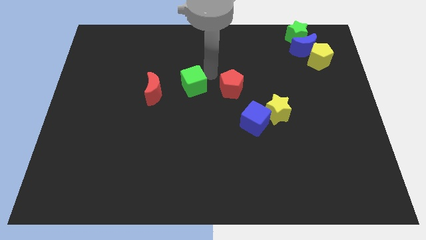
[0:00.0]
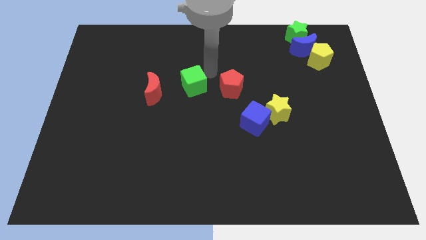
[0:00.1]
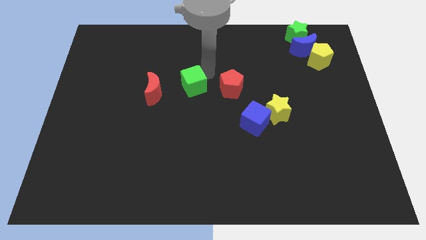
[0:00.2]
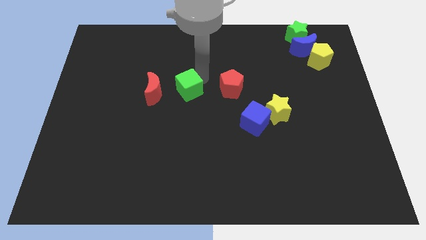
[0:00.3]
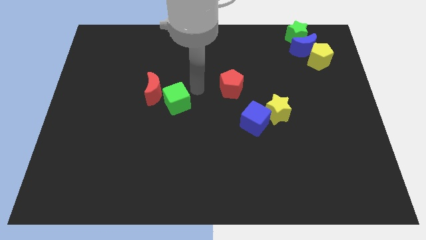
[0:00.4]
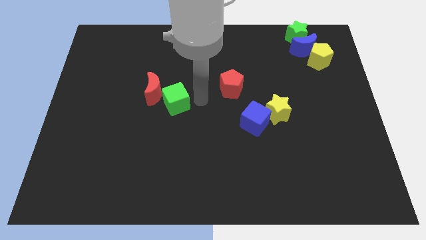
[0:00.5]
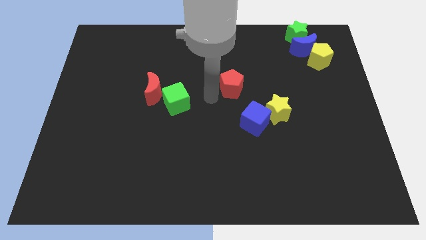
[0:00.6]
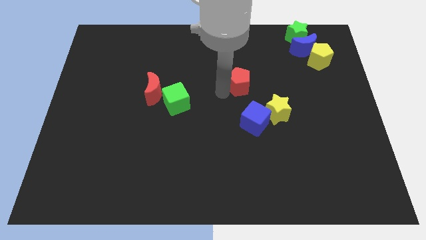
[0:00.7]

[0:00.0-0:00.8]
push the green cube to the bottom right to the red crescent

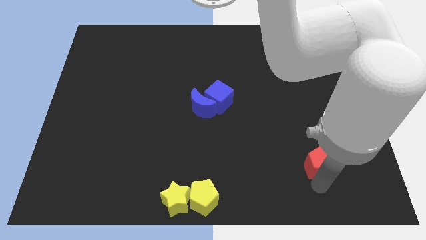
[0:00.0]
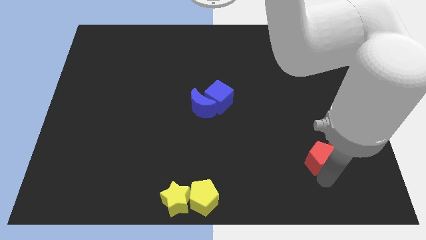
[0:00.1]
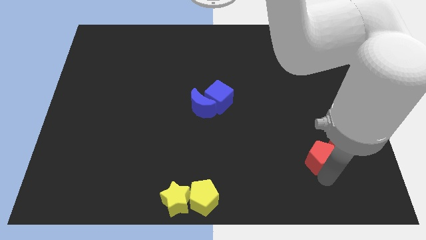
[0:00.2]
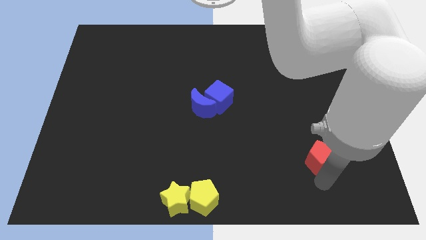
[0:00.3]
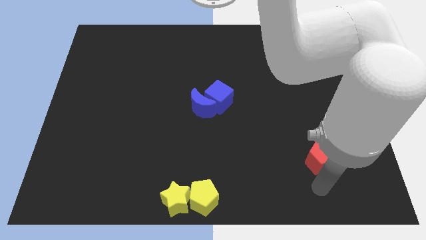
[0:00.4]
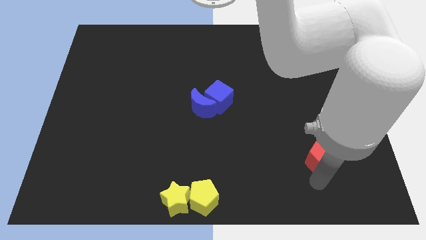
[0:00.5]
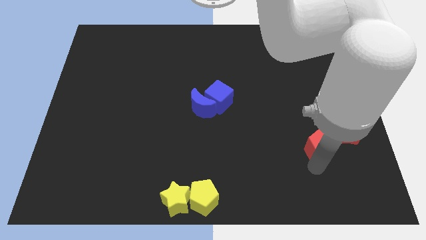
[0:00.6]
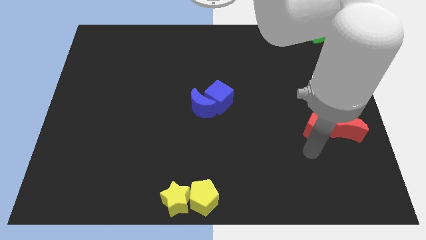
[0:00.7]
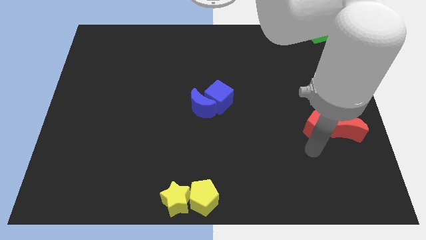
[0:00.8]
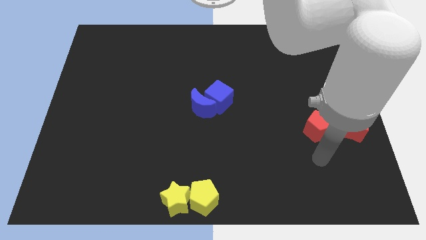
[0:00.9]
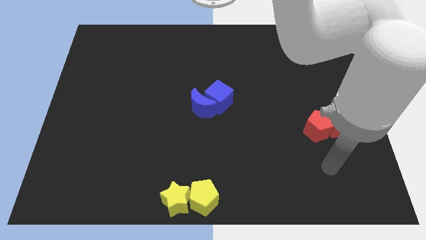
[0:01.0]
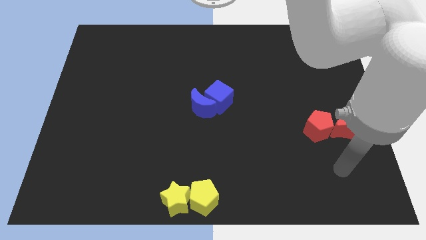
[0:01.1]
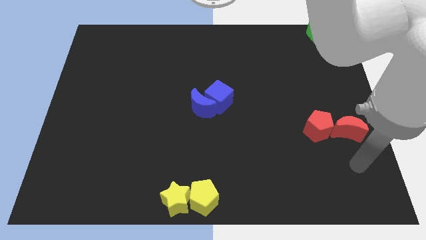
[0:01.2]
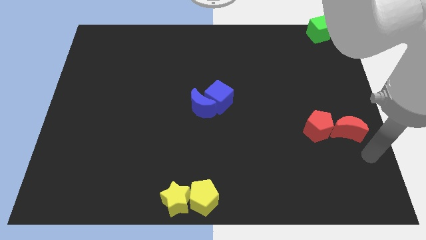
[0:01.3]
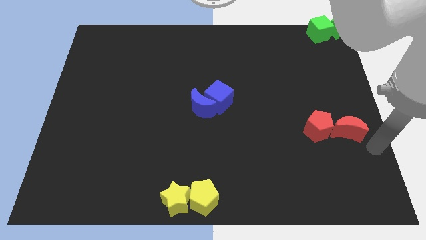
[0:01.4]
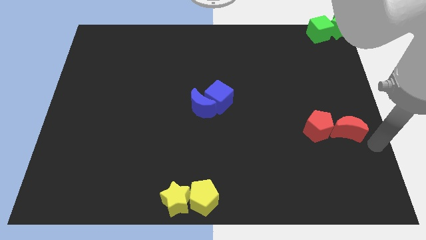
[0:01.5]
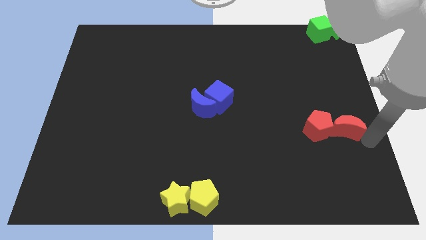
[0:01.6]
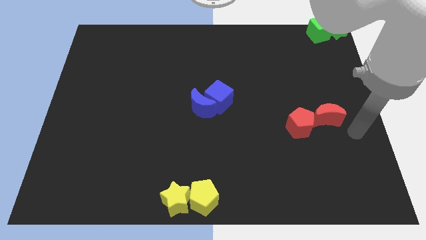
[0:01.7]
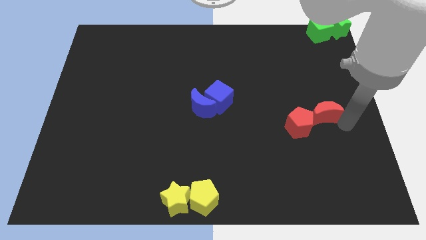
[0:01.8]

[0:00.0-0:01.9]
move the red pentagon to the top of the red moon

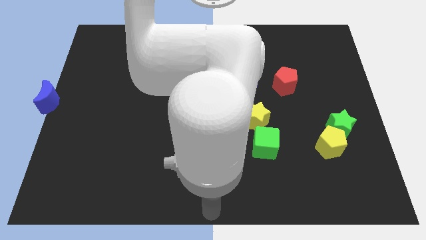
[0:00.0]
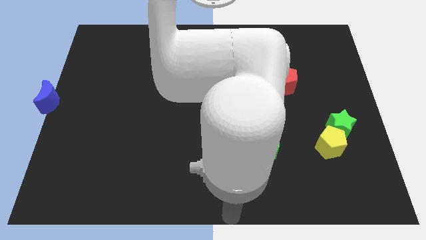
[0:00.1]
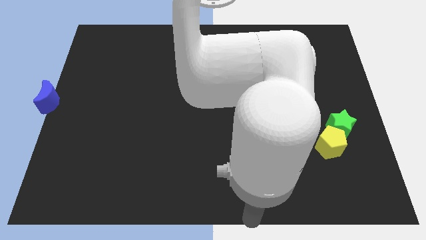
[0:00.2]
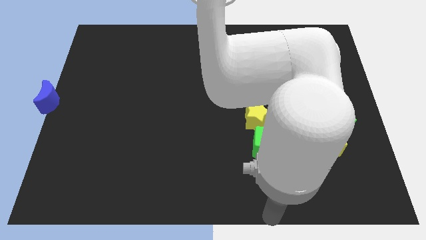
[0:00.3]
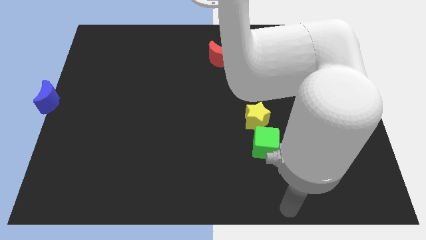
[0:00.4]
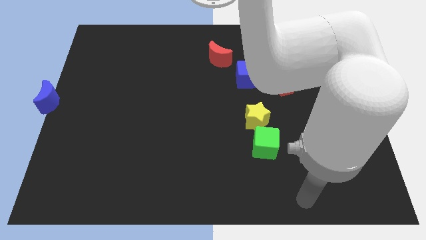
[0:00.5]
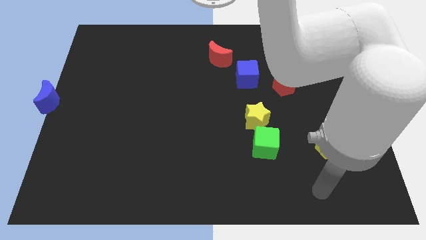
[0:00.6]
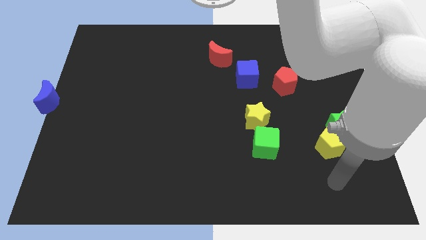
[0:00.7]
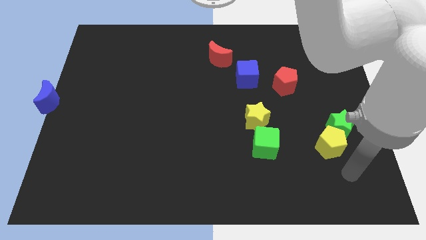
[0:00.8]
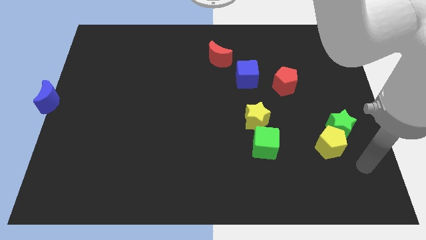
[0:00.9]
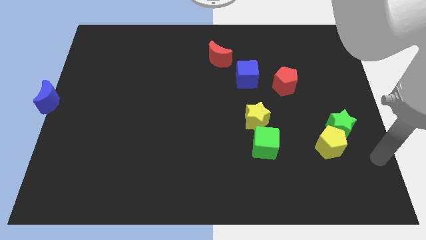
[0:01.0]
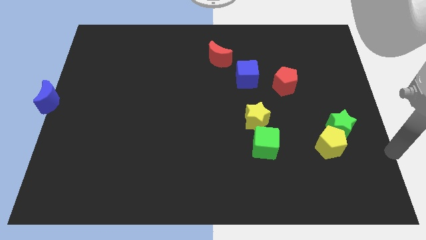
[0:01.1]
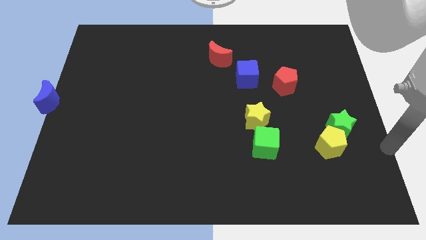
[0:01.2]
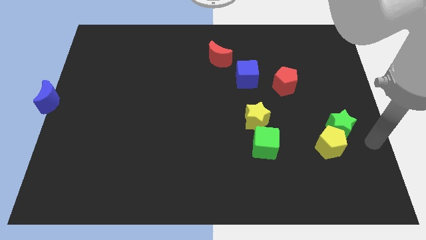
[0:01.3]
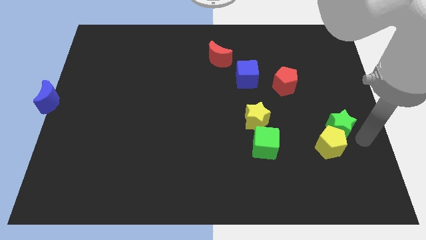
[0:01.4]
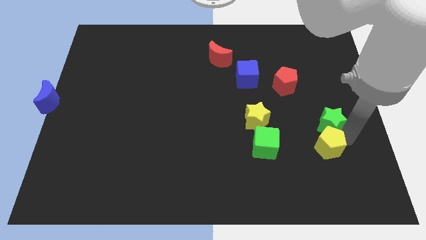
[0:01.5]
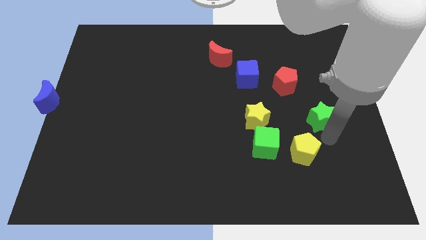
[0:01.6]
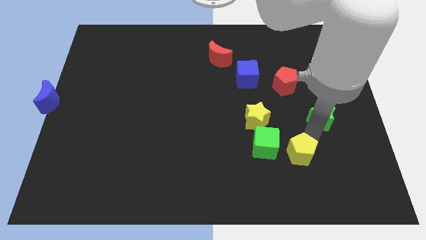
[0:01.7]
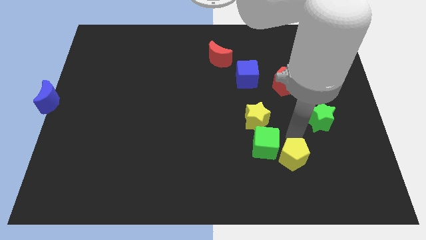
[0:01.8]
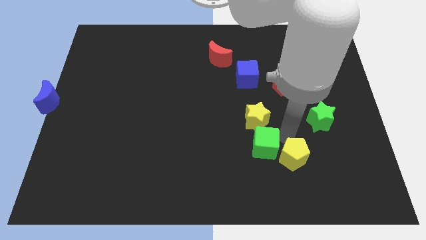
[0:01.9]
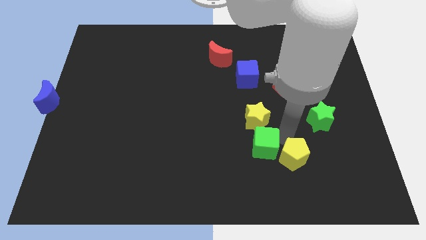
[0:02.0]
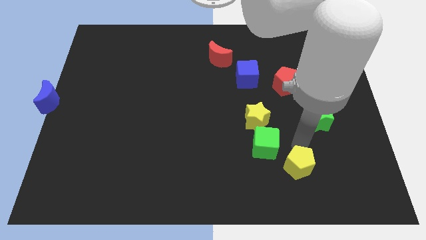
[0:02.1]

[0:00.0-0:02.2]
separate yellow pentagon from green star

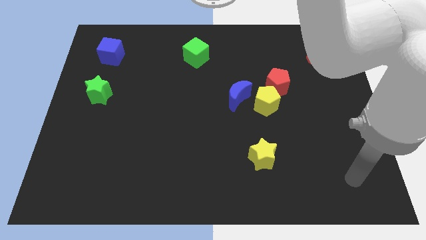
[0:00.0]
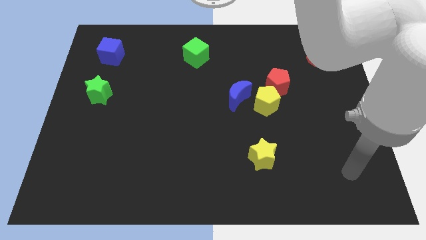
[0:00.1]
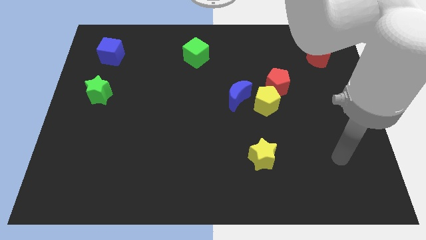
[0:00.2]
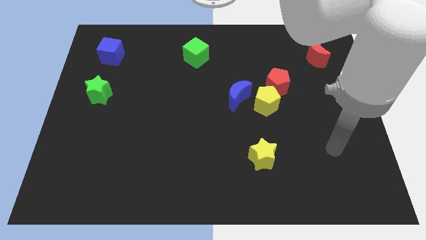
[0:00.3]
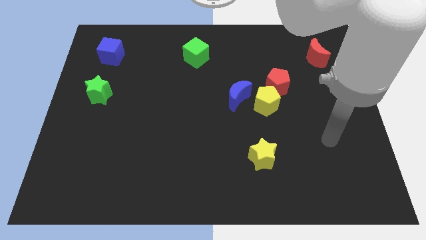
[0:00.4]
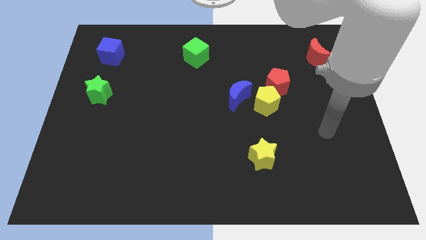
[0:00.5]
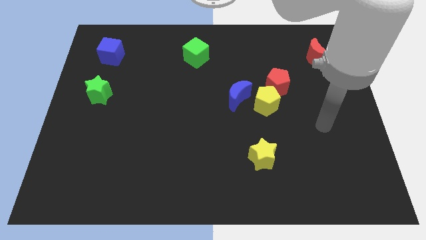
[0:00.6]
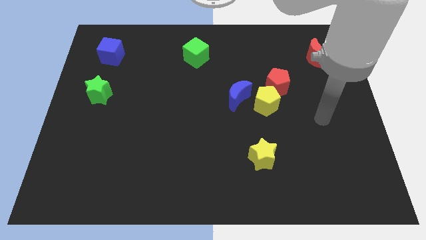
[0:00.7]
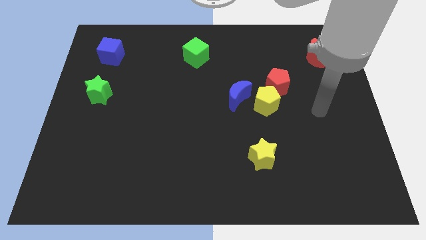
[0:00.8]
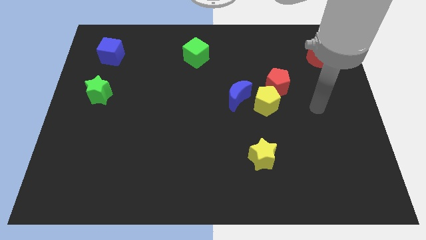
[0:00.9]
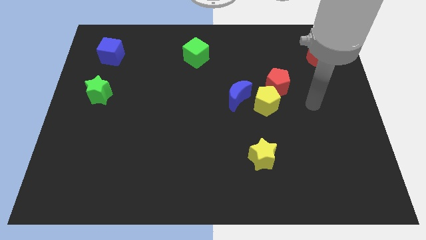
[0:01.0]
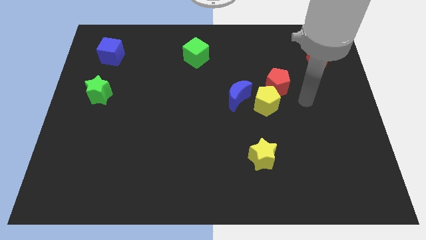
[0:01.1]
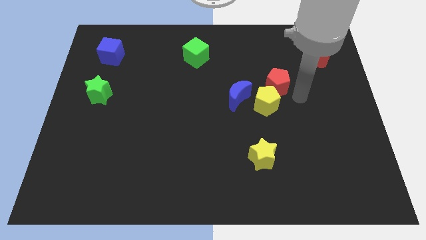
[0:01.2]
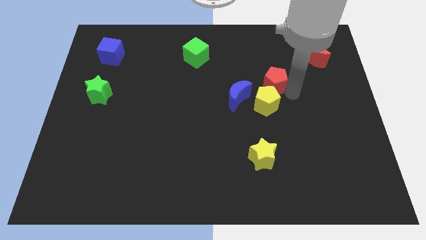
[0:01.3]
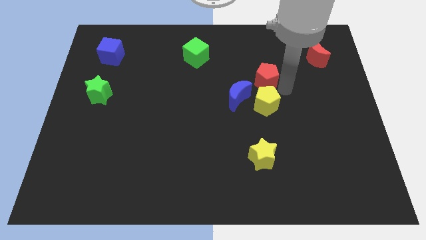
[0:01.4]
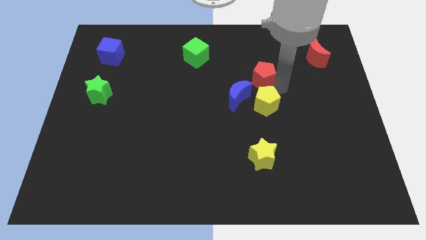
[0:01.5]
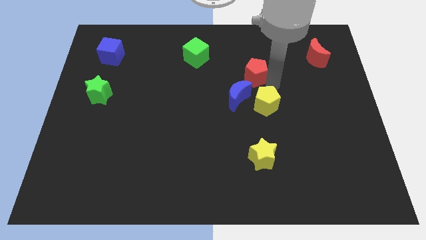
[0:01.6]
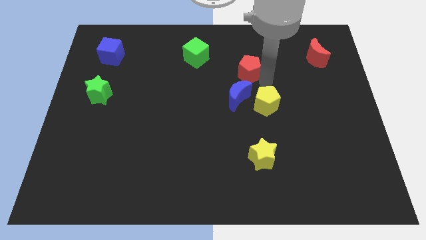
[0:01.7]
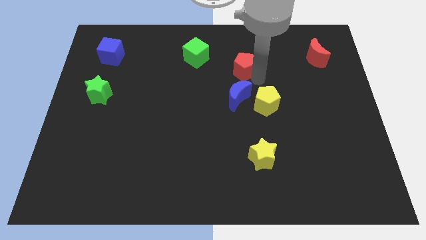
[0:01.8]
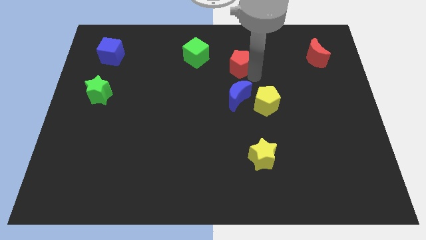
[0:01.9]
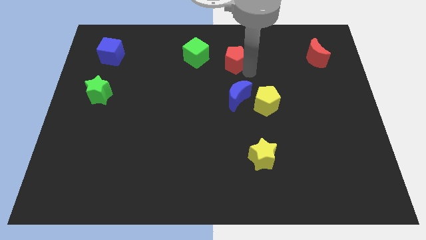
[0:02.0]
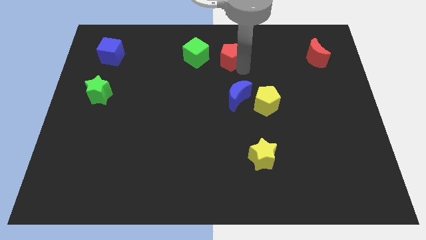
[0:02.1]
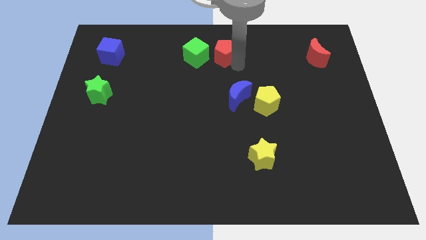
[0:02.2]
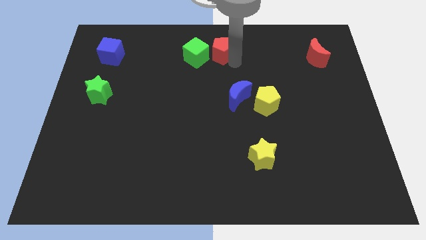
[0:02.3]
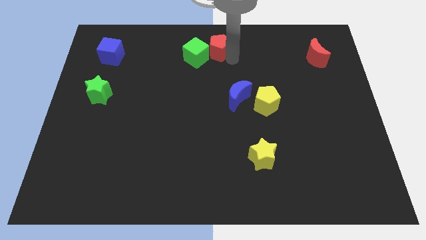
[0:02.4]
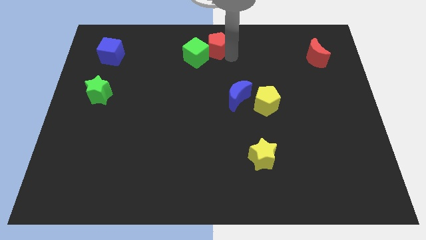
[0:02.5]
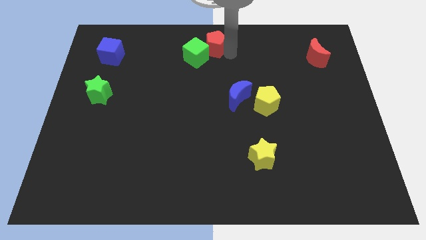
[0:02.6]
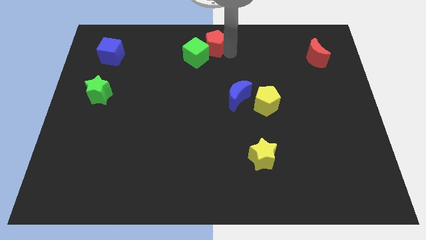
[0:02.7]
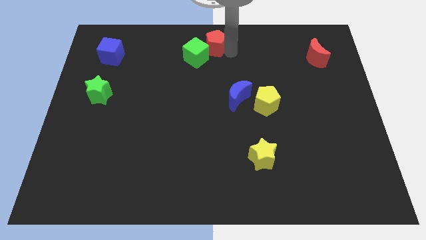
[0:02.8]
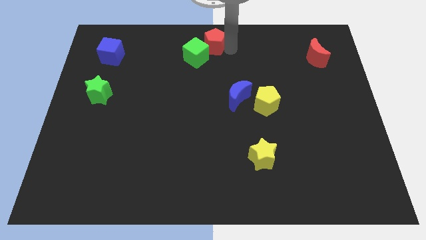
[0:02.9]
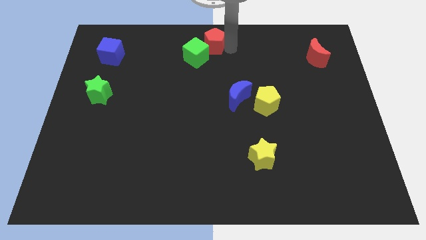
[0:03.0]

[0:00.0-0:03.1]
push the red pentagon near the top center of the board

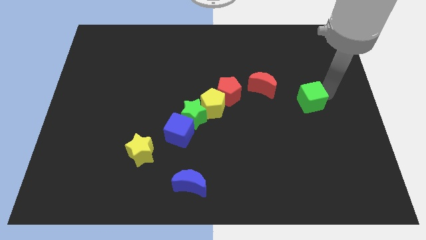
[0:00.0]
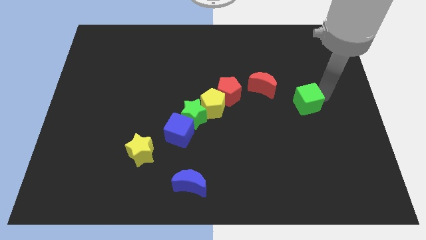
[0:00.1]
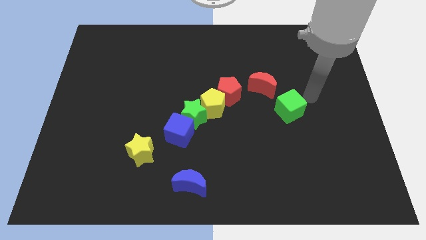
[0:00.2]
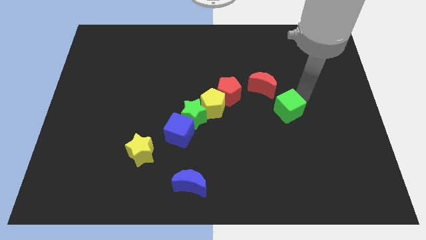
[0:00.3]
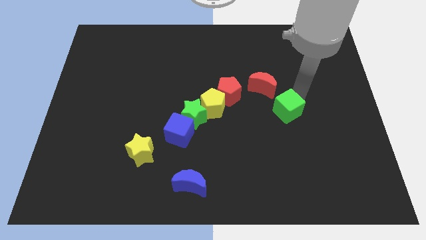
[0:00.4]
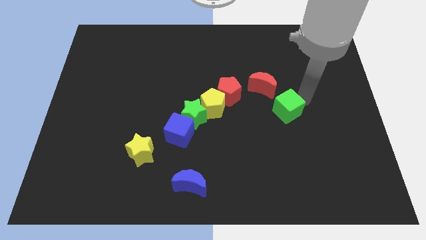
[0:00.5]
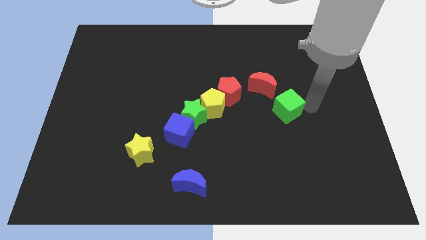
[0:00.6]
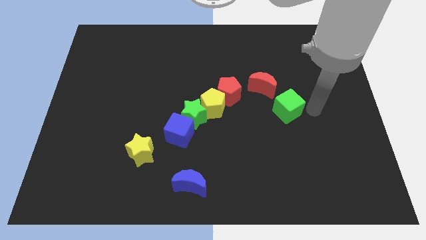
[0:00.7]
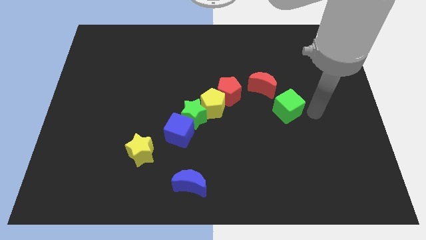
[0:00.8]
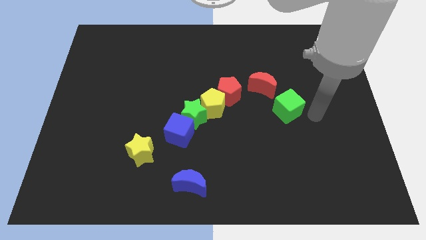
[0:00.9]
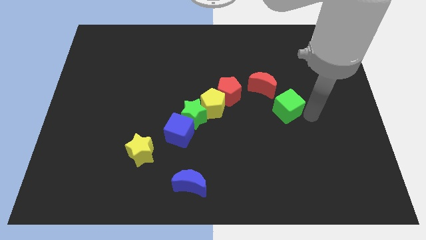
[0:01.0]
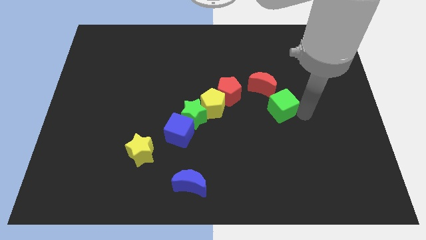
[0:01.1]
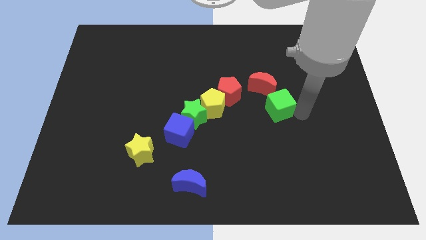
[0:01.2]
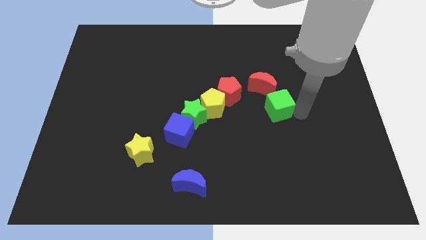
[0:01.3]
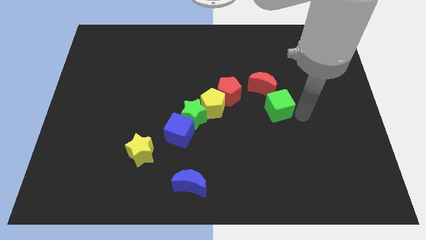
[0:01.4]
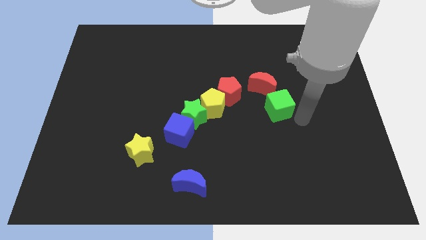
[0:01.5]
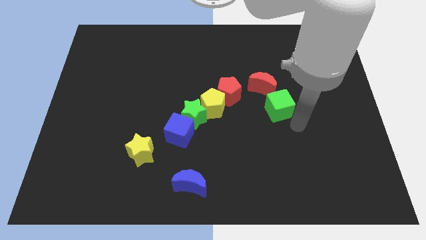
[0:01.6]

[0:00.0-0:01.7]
move the green cube towards the right bottom of the red crescent
